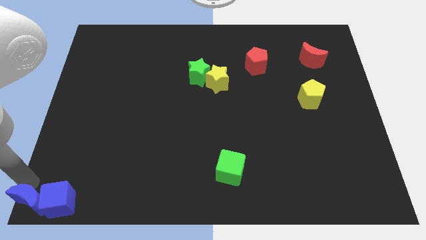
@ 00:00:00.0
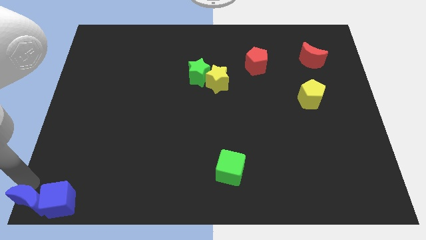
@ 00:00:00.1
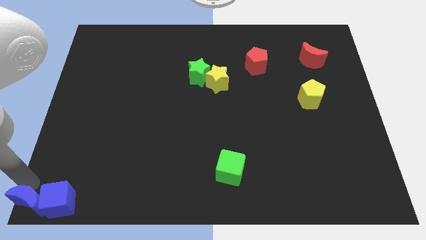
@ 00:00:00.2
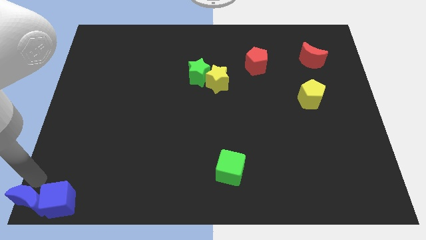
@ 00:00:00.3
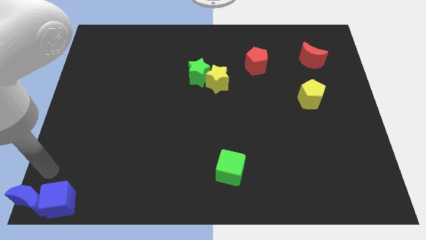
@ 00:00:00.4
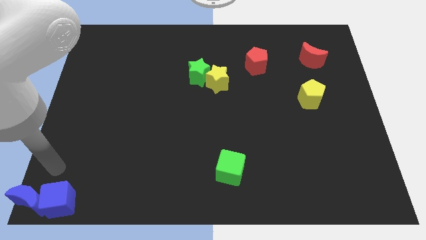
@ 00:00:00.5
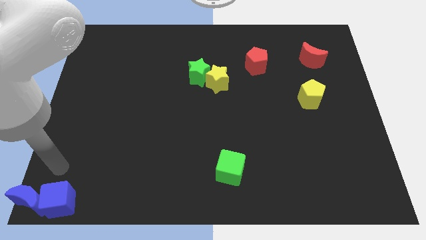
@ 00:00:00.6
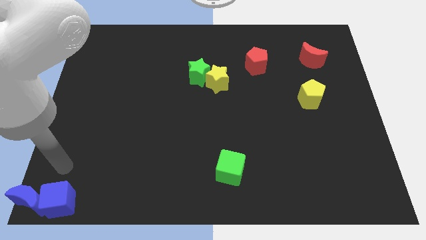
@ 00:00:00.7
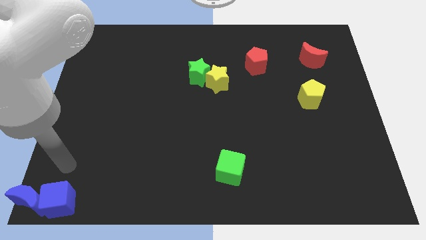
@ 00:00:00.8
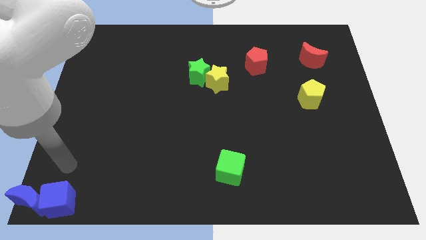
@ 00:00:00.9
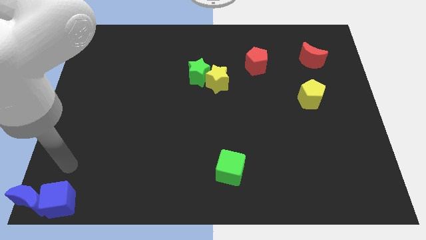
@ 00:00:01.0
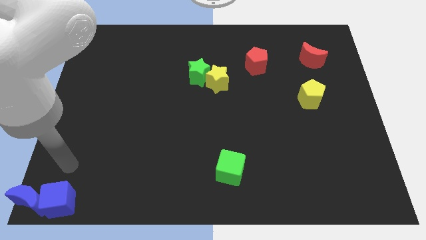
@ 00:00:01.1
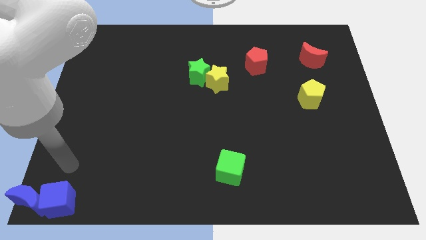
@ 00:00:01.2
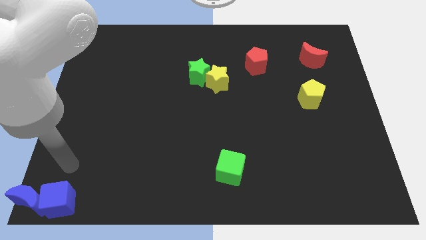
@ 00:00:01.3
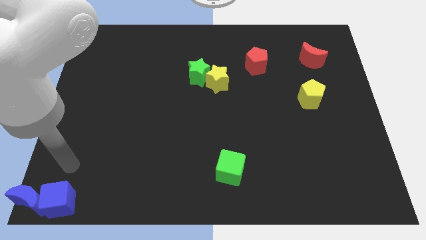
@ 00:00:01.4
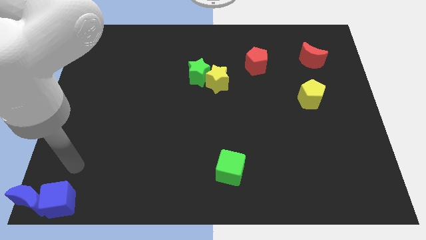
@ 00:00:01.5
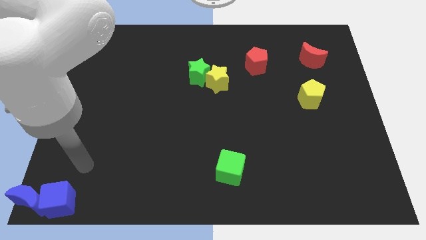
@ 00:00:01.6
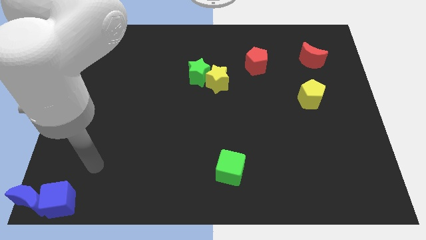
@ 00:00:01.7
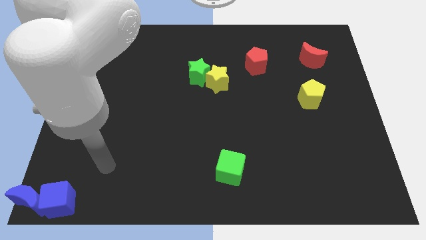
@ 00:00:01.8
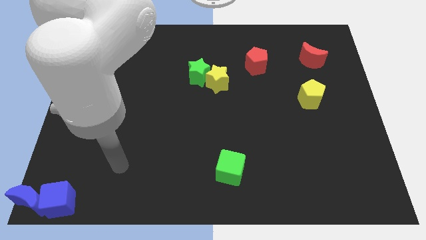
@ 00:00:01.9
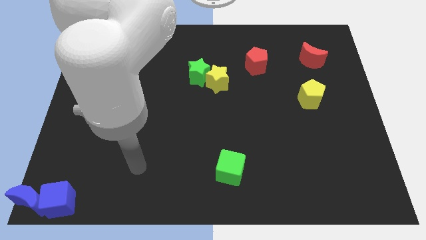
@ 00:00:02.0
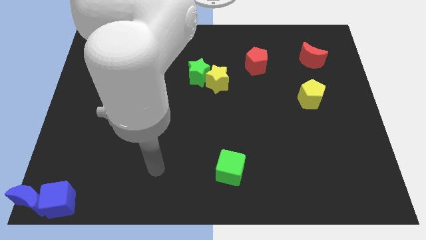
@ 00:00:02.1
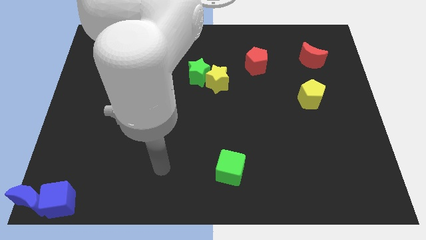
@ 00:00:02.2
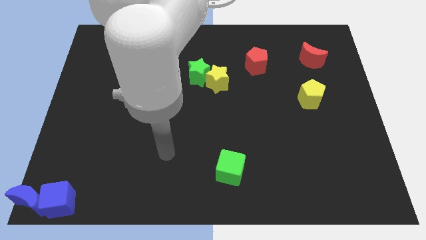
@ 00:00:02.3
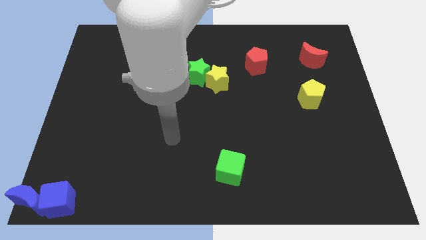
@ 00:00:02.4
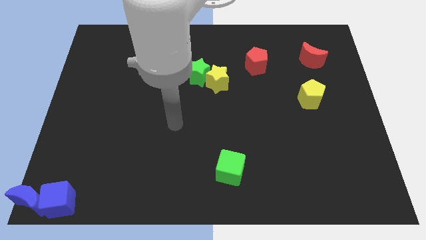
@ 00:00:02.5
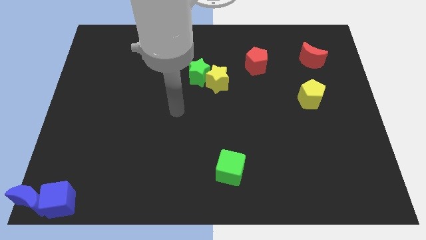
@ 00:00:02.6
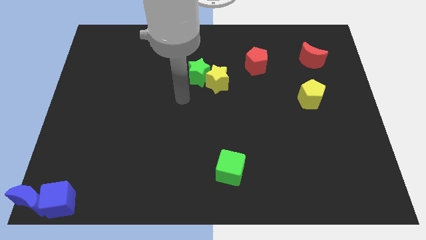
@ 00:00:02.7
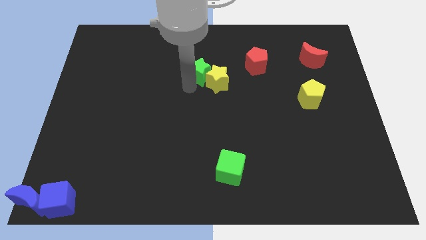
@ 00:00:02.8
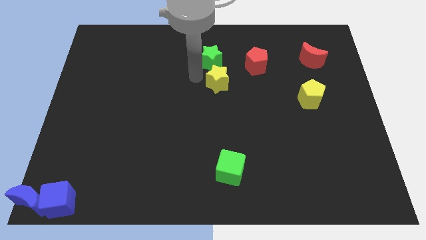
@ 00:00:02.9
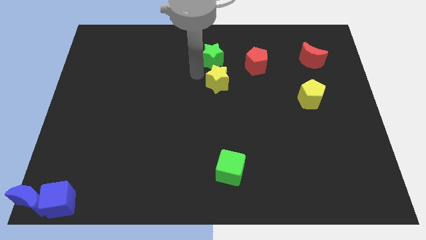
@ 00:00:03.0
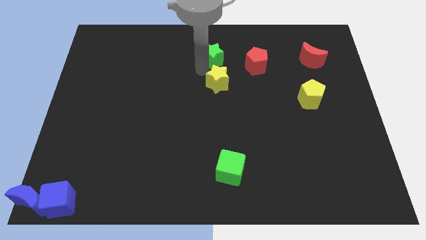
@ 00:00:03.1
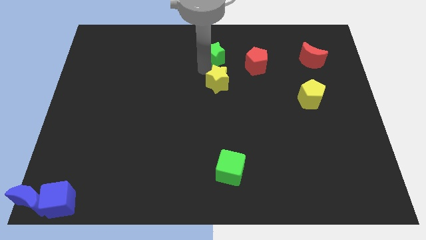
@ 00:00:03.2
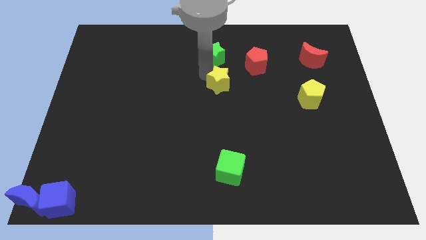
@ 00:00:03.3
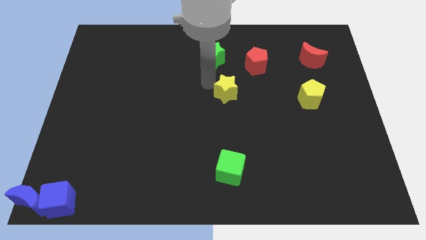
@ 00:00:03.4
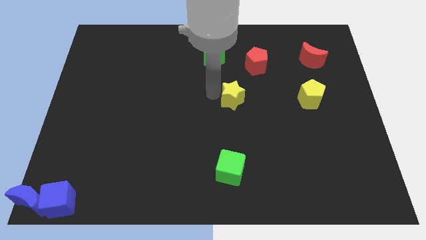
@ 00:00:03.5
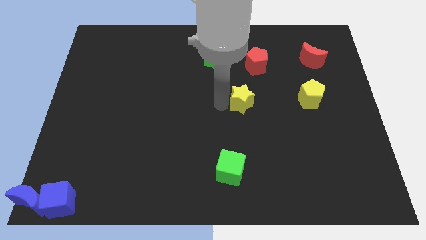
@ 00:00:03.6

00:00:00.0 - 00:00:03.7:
move the arm away from the blue moon

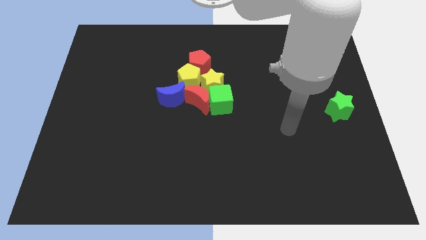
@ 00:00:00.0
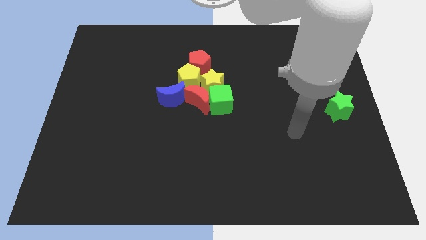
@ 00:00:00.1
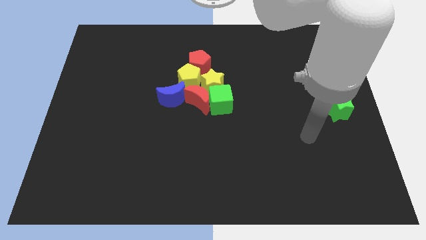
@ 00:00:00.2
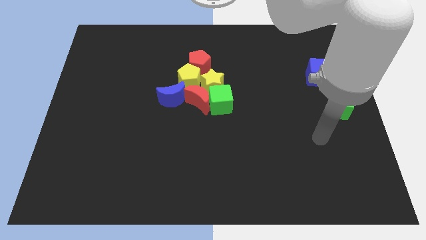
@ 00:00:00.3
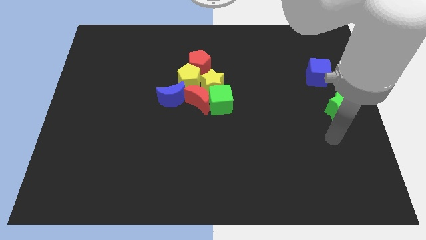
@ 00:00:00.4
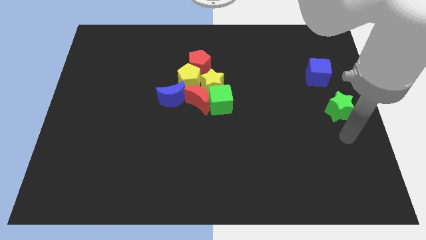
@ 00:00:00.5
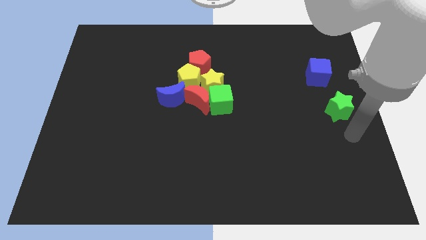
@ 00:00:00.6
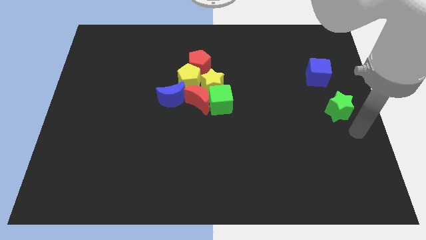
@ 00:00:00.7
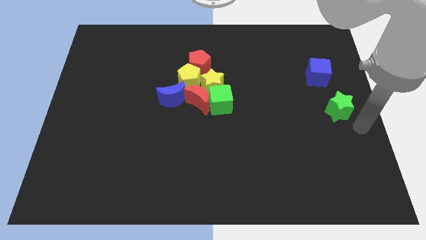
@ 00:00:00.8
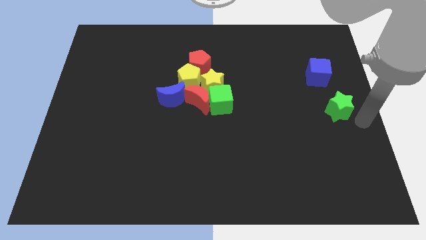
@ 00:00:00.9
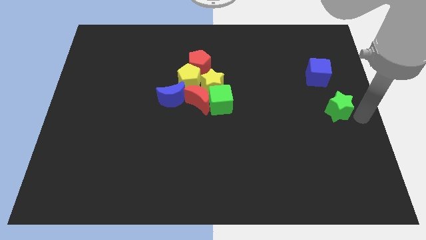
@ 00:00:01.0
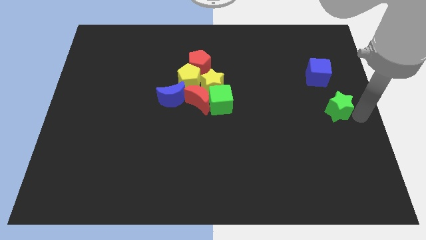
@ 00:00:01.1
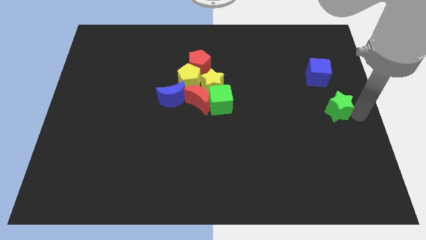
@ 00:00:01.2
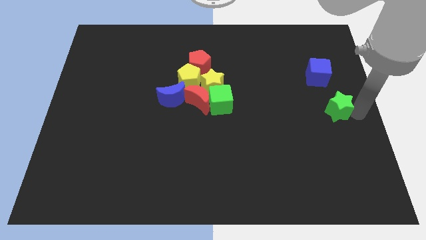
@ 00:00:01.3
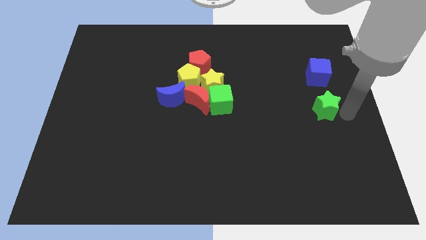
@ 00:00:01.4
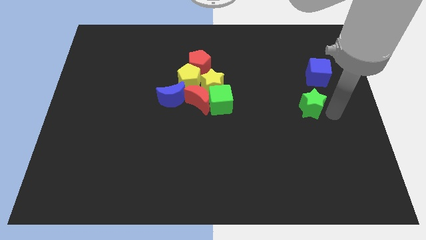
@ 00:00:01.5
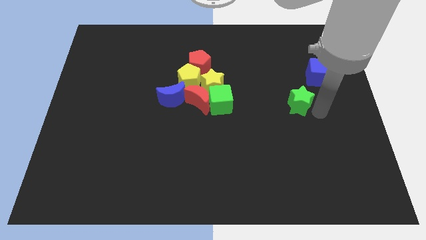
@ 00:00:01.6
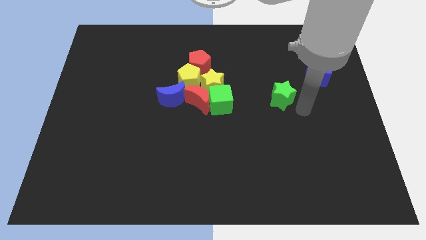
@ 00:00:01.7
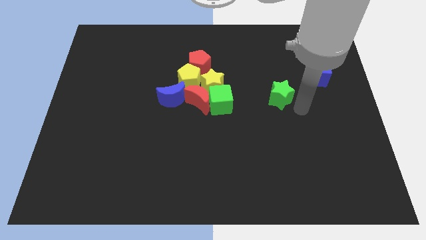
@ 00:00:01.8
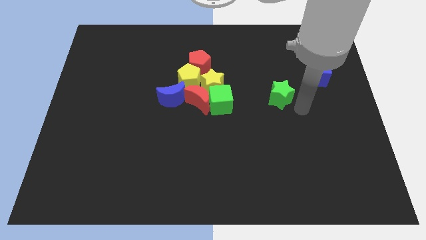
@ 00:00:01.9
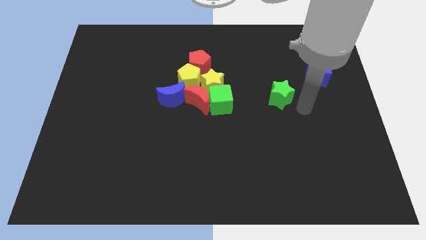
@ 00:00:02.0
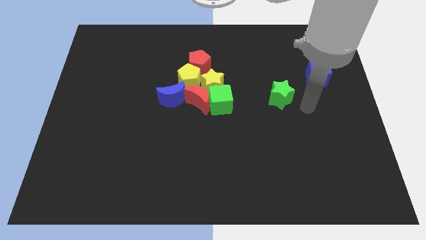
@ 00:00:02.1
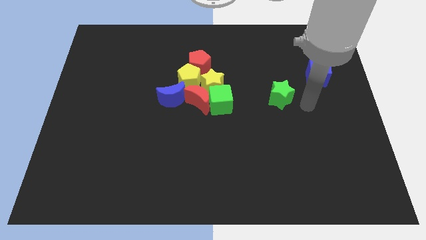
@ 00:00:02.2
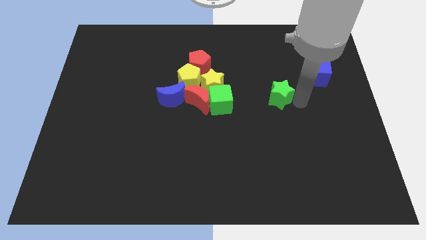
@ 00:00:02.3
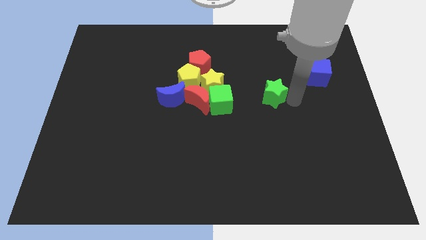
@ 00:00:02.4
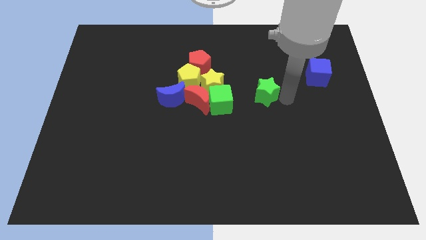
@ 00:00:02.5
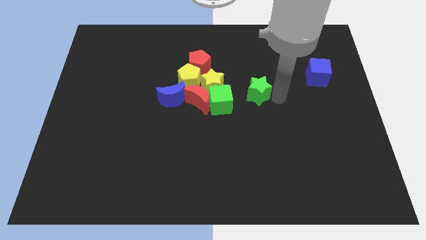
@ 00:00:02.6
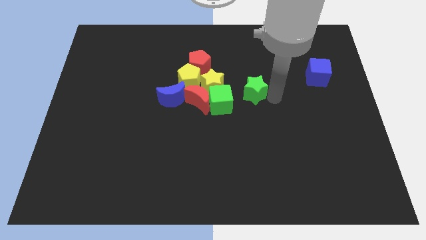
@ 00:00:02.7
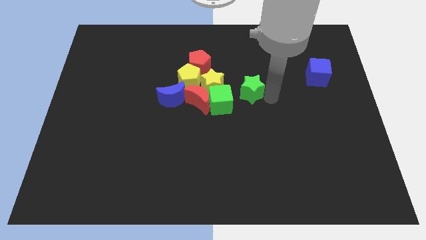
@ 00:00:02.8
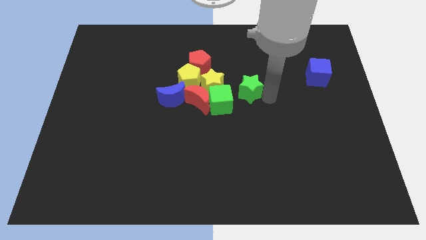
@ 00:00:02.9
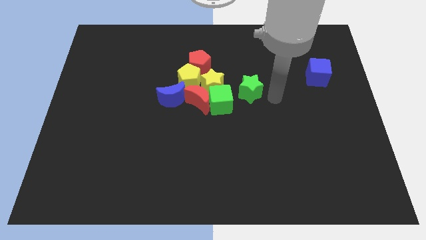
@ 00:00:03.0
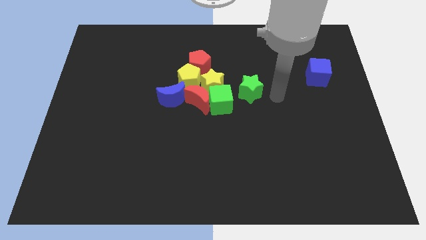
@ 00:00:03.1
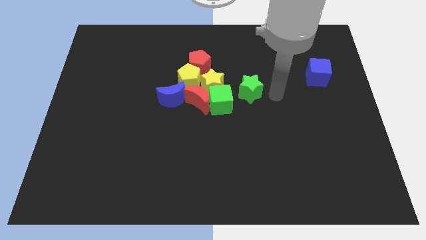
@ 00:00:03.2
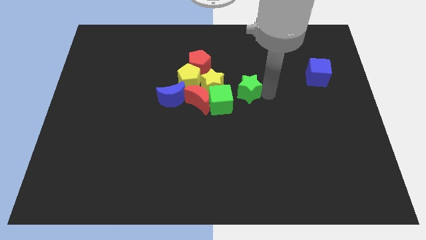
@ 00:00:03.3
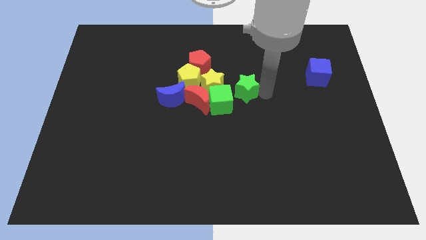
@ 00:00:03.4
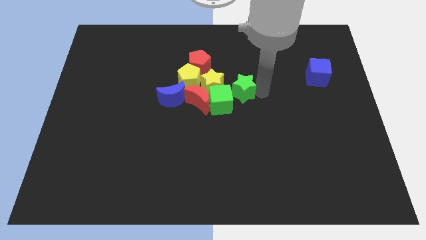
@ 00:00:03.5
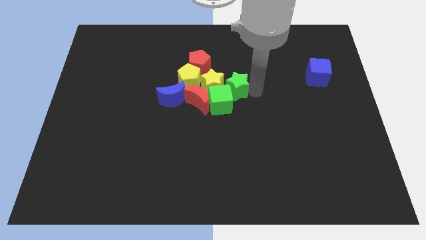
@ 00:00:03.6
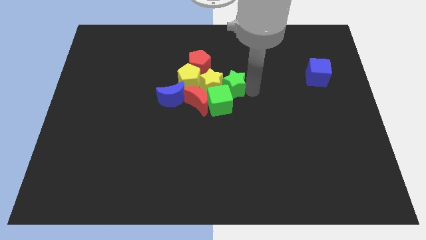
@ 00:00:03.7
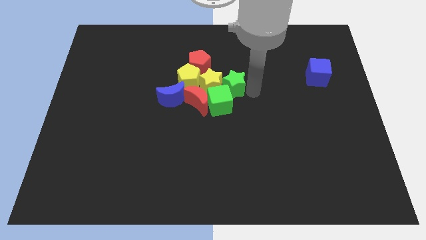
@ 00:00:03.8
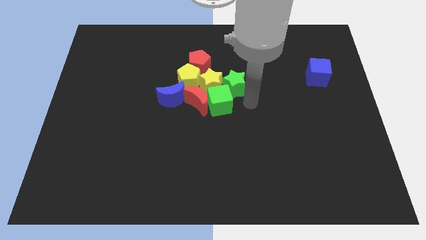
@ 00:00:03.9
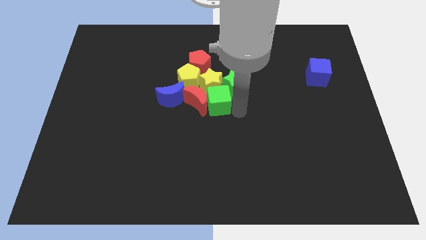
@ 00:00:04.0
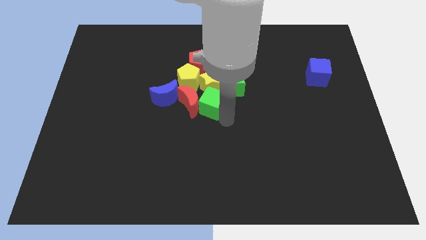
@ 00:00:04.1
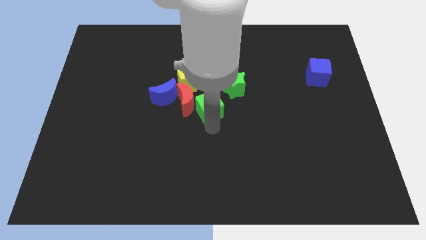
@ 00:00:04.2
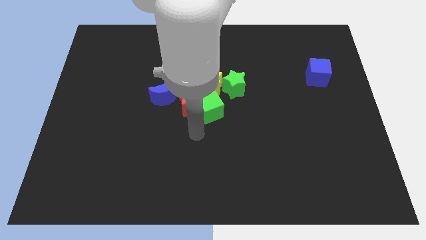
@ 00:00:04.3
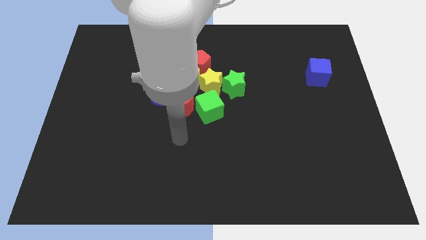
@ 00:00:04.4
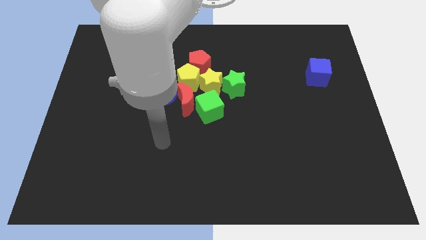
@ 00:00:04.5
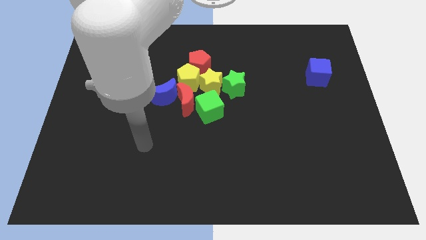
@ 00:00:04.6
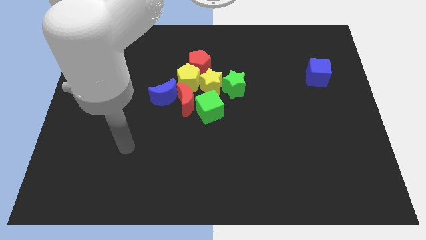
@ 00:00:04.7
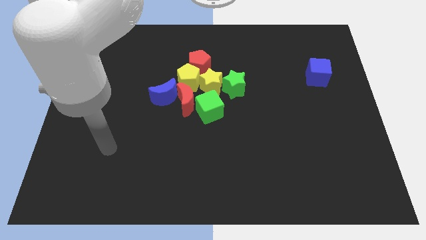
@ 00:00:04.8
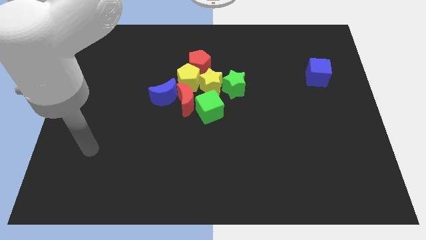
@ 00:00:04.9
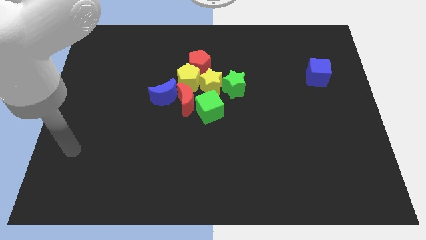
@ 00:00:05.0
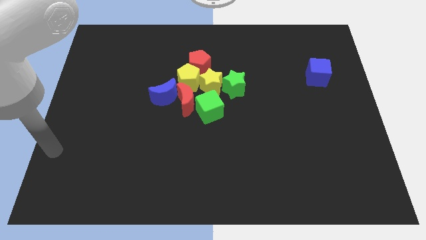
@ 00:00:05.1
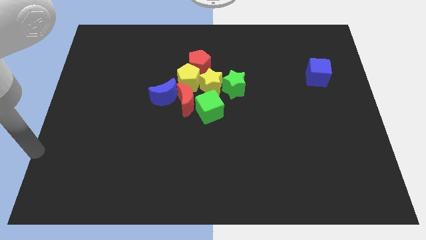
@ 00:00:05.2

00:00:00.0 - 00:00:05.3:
place green star right to the yellow star
